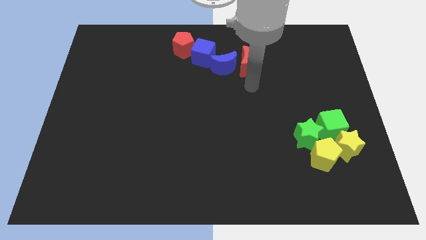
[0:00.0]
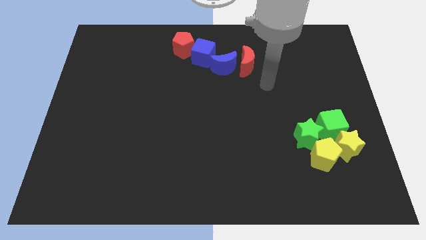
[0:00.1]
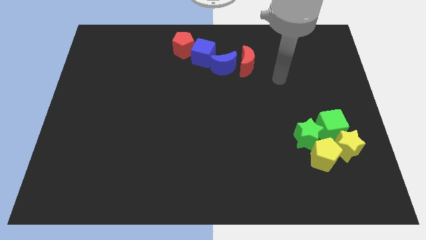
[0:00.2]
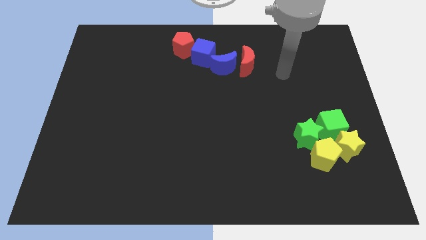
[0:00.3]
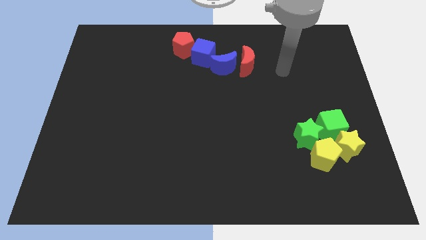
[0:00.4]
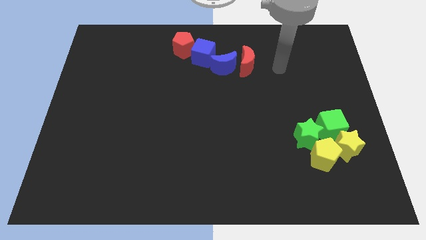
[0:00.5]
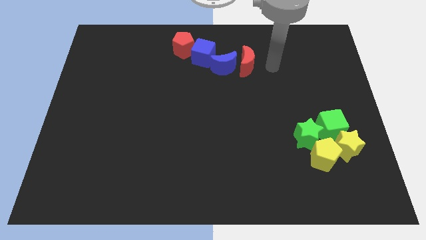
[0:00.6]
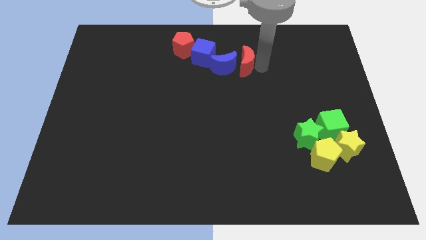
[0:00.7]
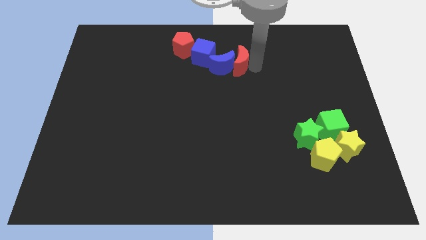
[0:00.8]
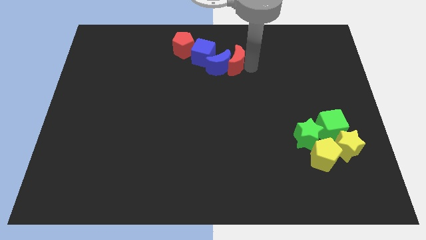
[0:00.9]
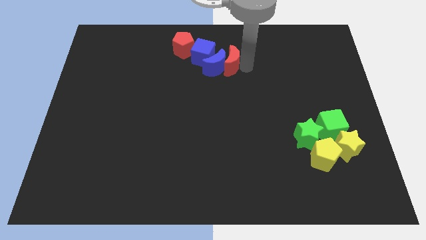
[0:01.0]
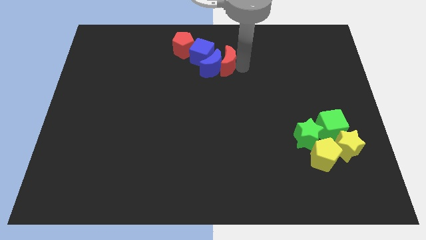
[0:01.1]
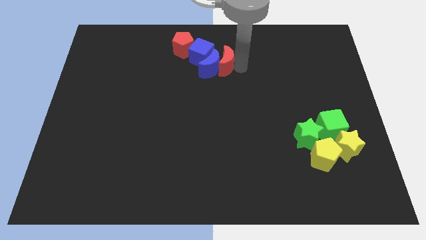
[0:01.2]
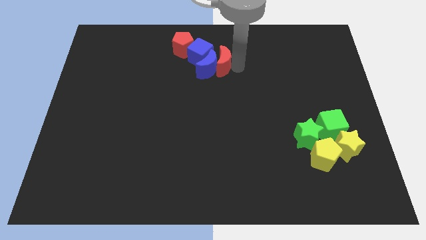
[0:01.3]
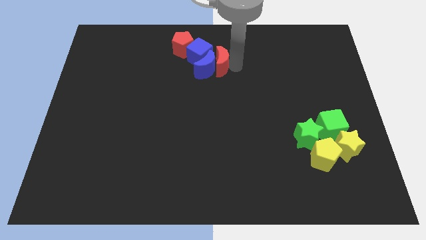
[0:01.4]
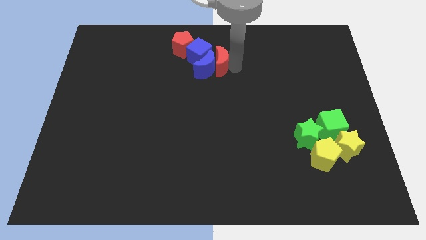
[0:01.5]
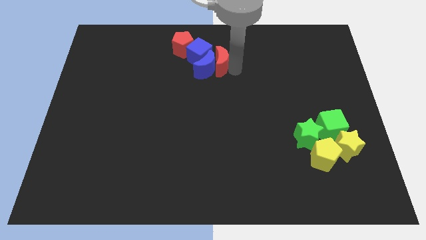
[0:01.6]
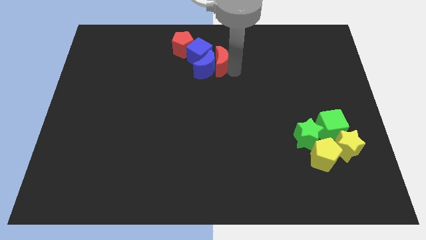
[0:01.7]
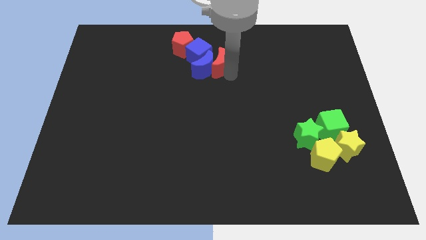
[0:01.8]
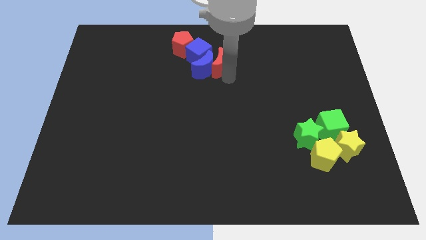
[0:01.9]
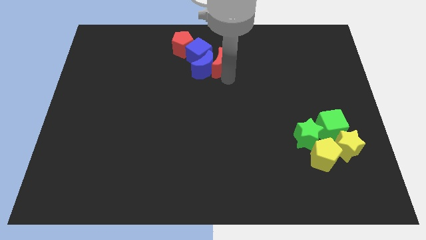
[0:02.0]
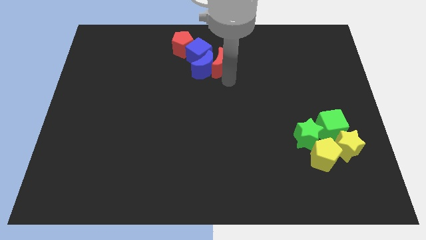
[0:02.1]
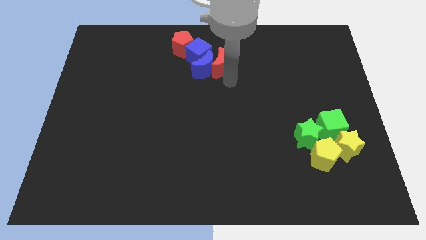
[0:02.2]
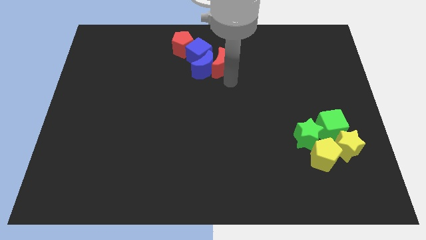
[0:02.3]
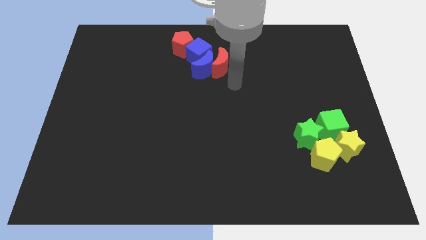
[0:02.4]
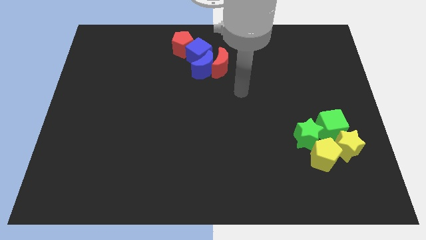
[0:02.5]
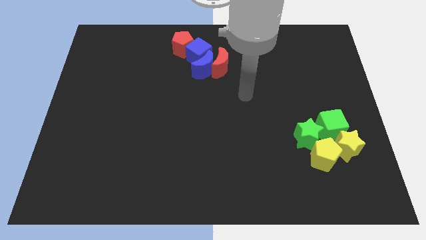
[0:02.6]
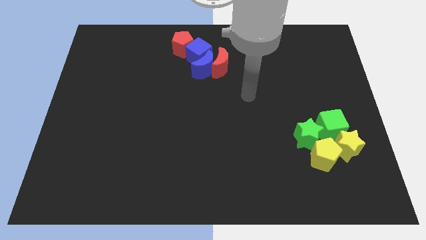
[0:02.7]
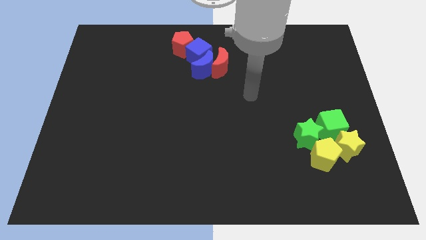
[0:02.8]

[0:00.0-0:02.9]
push the red moon into the blue moon

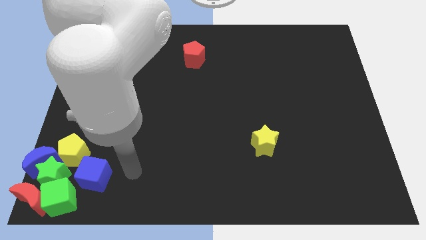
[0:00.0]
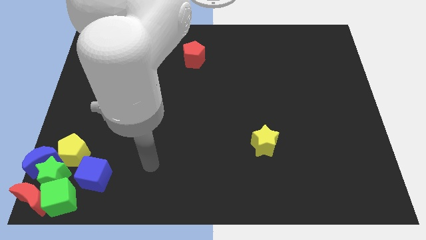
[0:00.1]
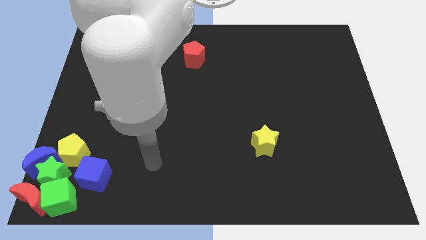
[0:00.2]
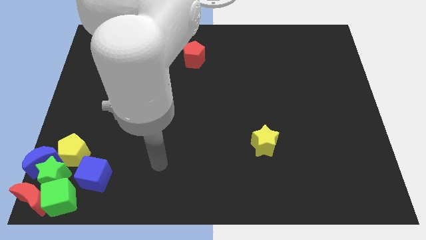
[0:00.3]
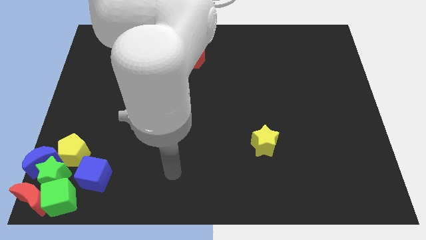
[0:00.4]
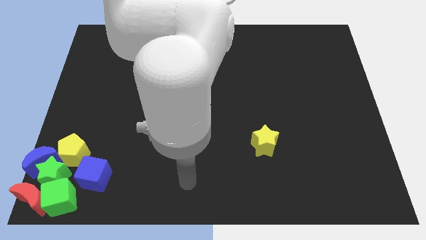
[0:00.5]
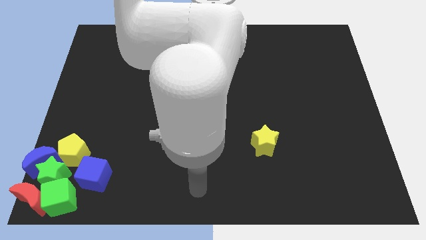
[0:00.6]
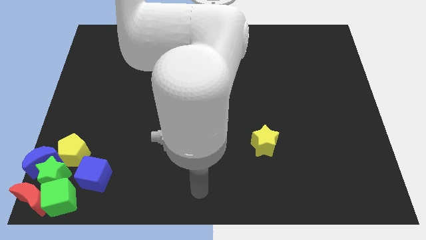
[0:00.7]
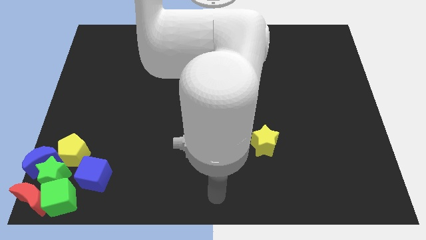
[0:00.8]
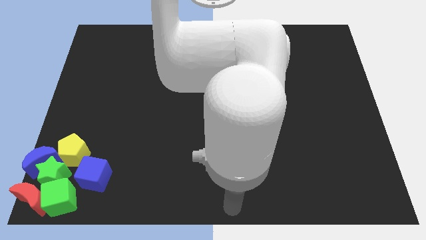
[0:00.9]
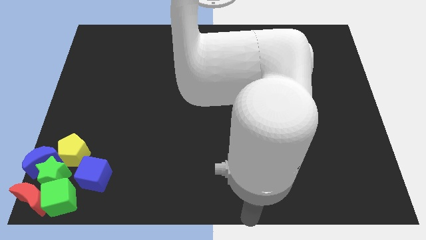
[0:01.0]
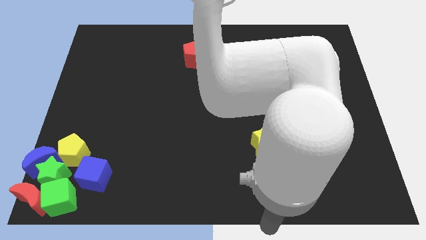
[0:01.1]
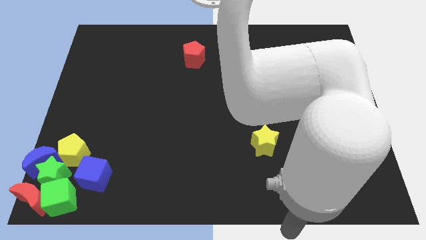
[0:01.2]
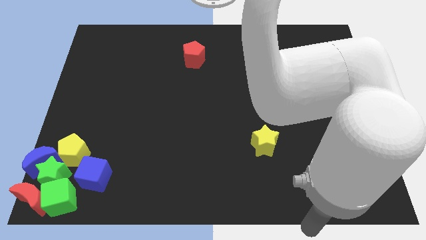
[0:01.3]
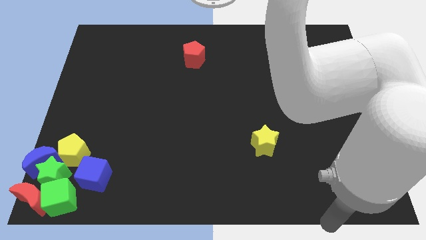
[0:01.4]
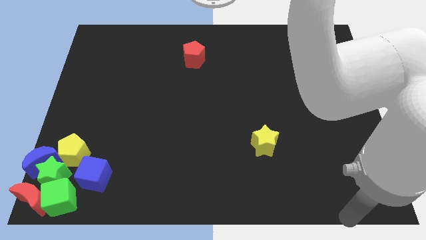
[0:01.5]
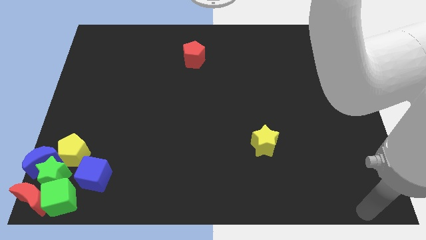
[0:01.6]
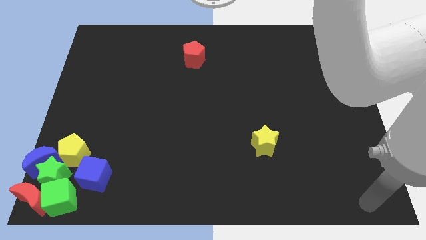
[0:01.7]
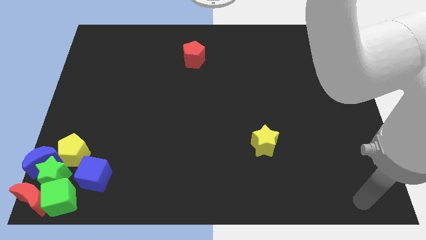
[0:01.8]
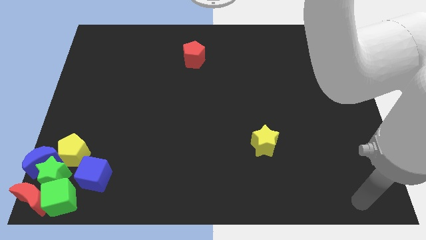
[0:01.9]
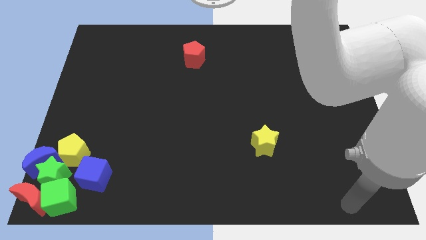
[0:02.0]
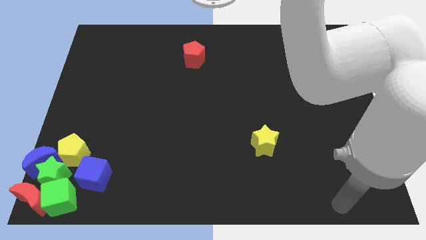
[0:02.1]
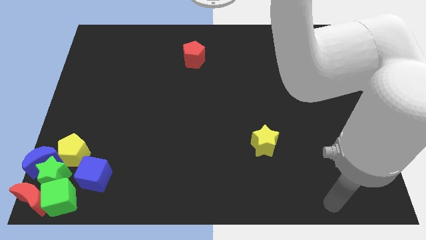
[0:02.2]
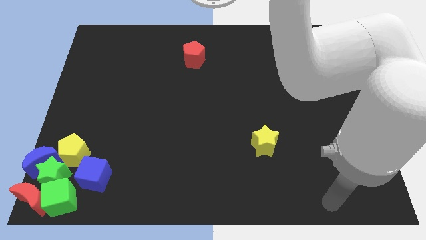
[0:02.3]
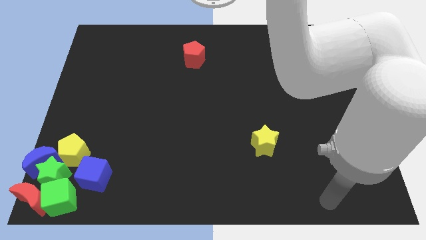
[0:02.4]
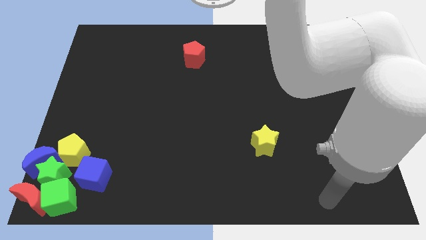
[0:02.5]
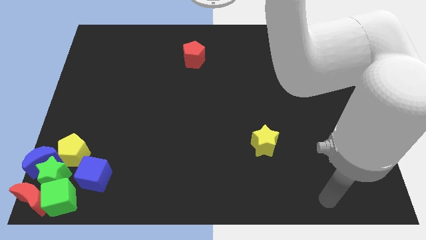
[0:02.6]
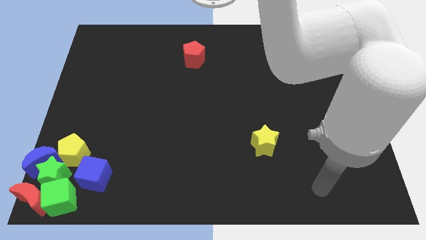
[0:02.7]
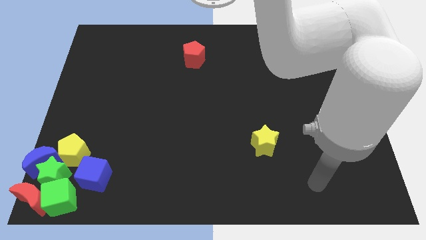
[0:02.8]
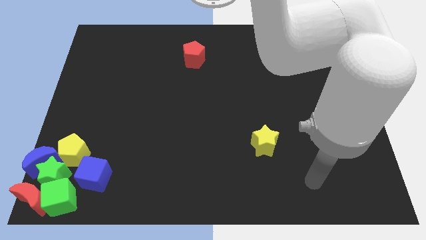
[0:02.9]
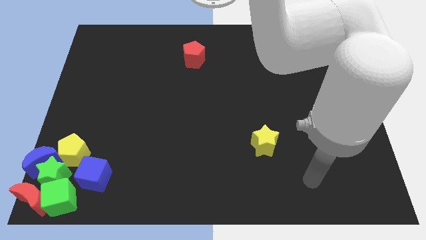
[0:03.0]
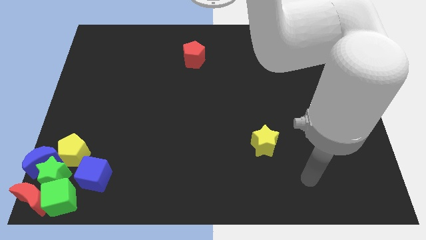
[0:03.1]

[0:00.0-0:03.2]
move the arm away from the blue cube

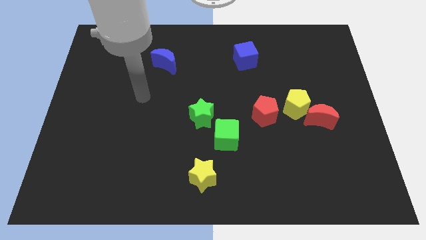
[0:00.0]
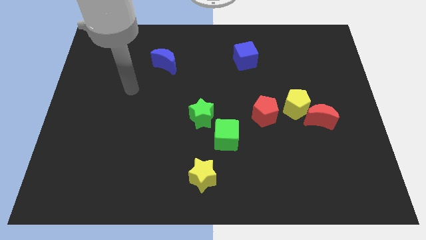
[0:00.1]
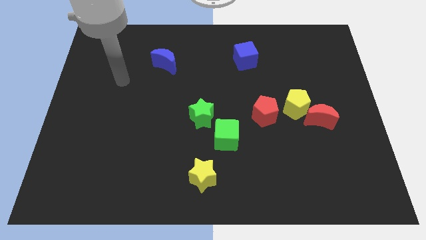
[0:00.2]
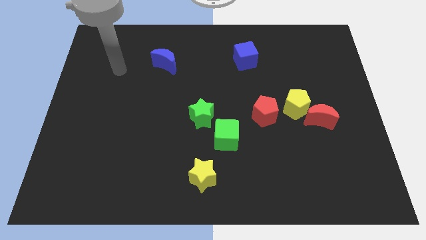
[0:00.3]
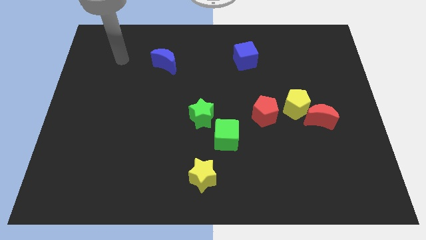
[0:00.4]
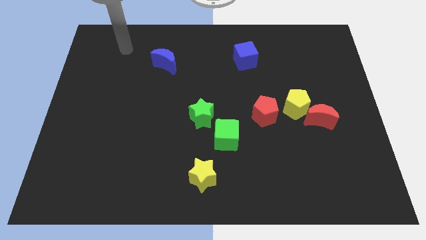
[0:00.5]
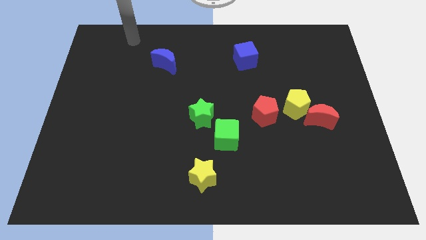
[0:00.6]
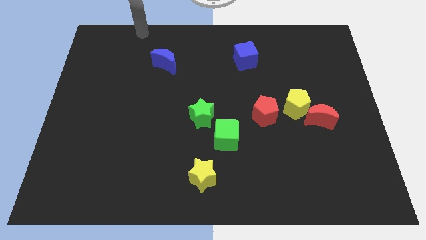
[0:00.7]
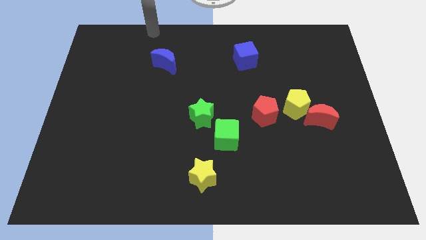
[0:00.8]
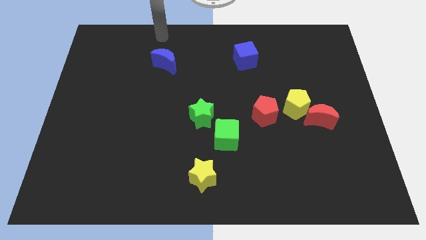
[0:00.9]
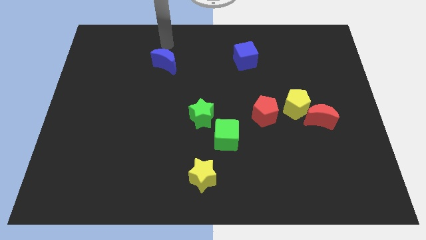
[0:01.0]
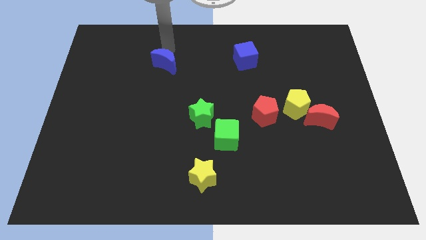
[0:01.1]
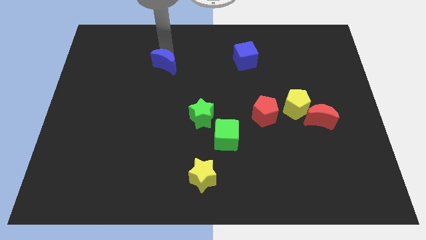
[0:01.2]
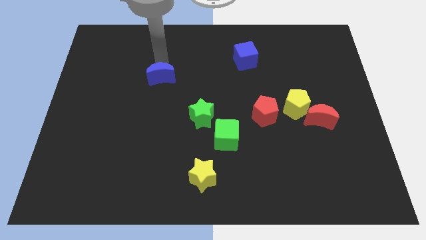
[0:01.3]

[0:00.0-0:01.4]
move your arm to the top of blue crescent

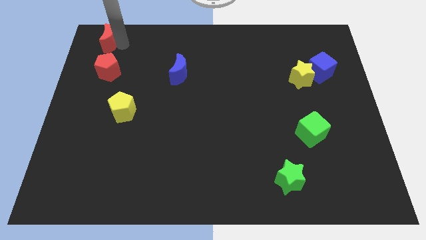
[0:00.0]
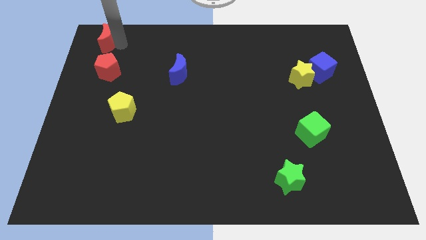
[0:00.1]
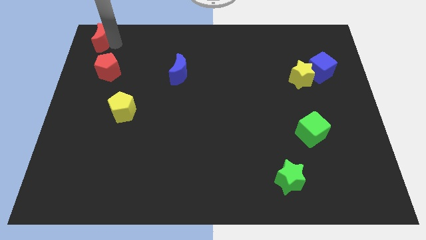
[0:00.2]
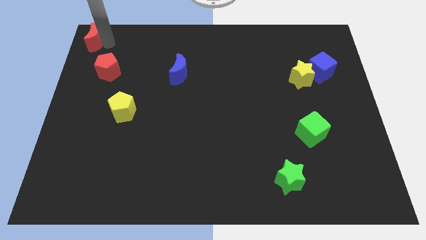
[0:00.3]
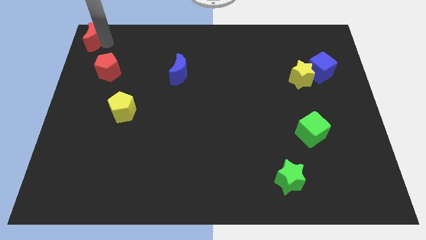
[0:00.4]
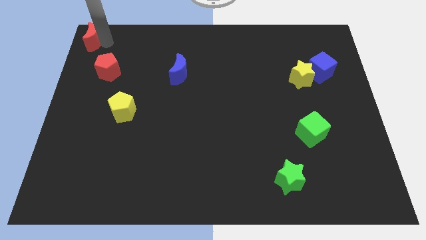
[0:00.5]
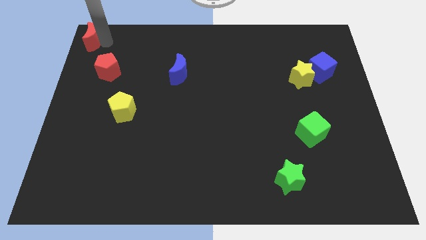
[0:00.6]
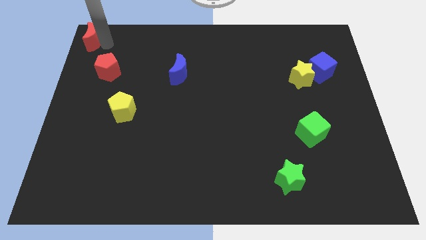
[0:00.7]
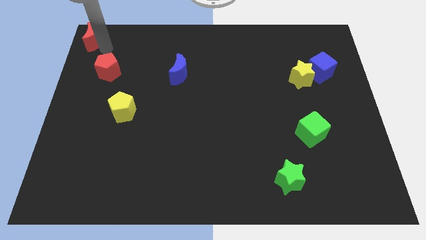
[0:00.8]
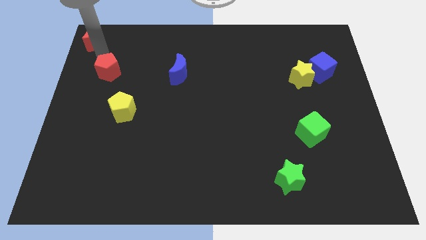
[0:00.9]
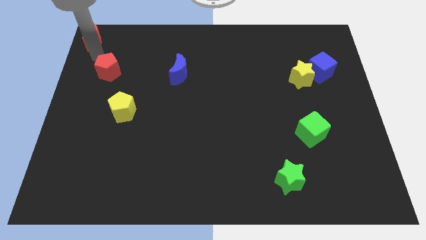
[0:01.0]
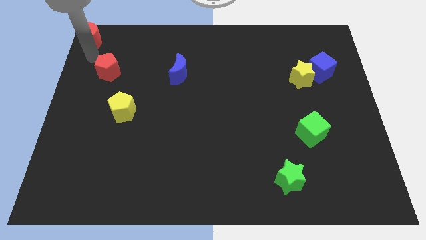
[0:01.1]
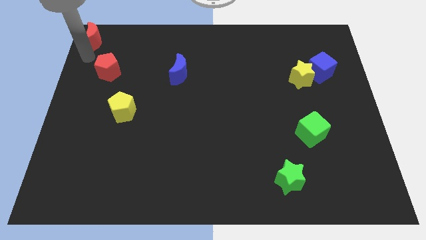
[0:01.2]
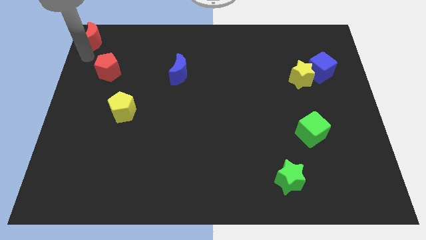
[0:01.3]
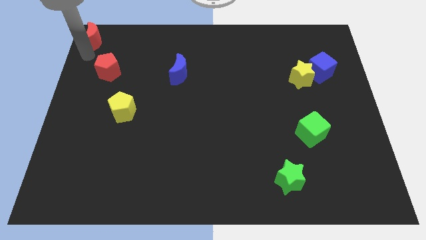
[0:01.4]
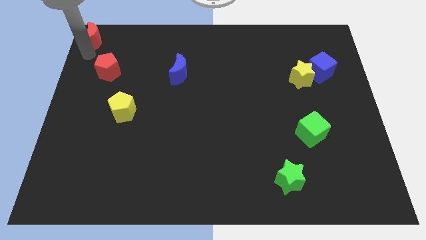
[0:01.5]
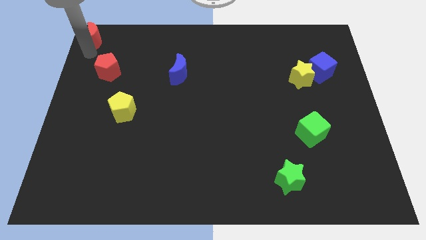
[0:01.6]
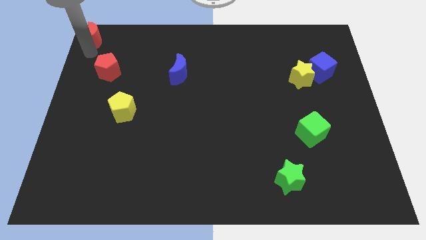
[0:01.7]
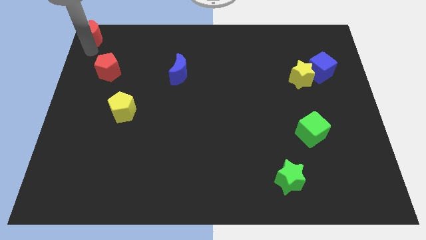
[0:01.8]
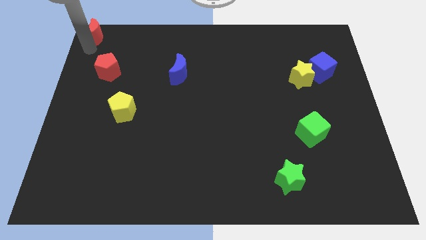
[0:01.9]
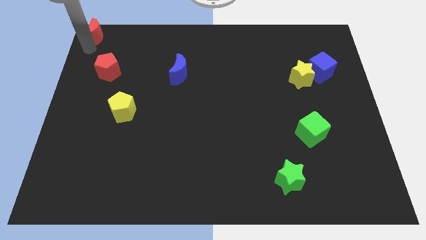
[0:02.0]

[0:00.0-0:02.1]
push the red crescent to the top left of the board
